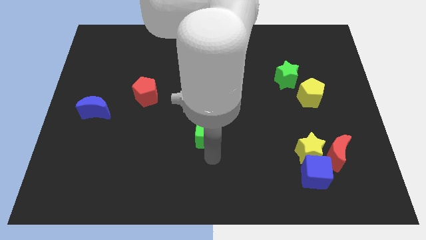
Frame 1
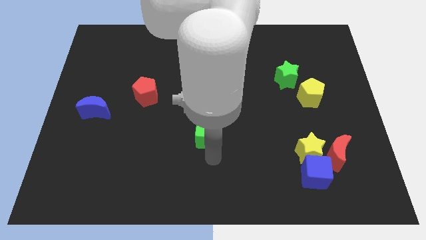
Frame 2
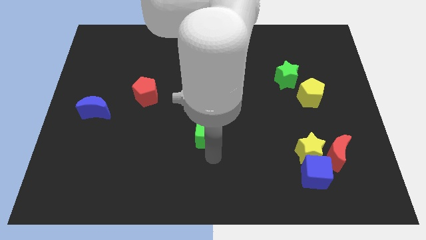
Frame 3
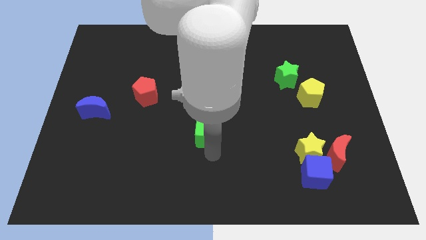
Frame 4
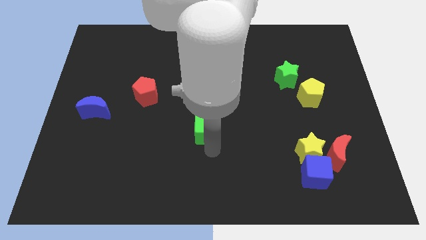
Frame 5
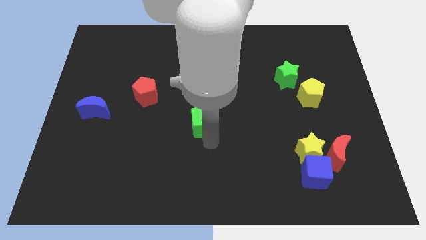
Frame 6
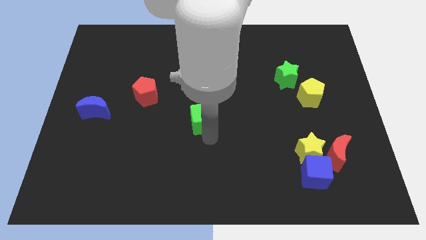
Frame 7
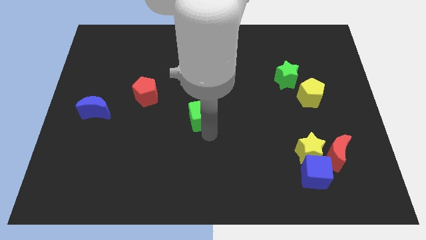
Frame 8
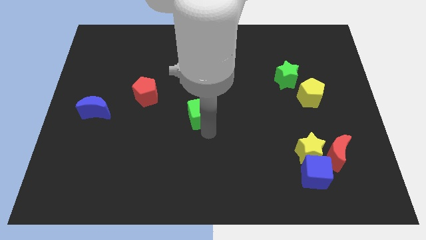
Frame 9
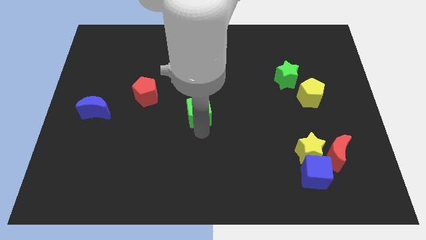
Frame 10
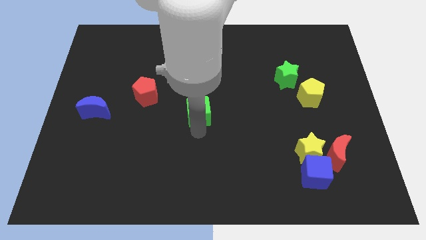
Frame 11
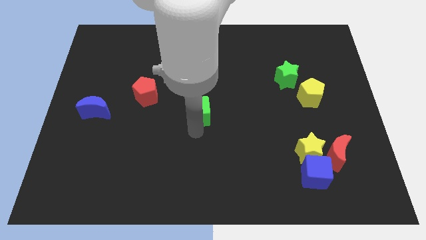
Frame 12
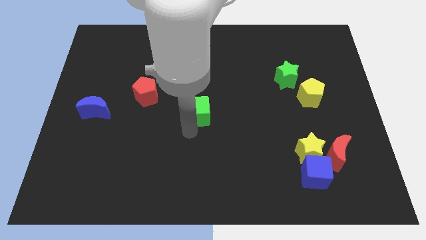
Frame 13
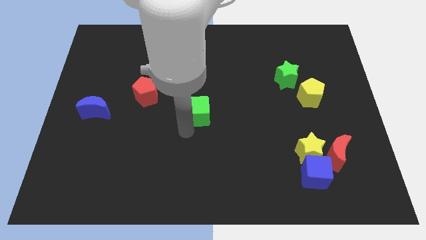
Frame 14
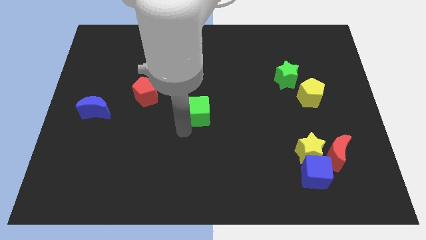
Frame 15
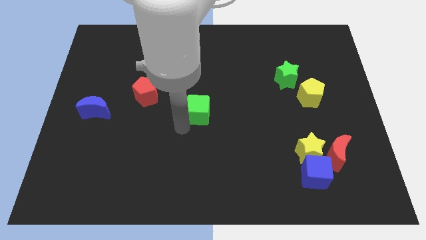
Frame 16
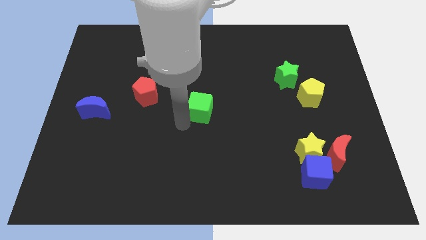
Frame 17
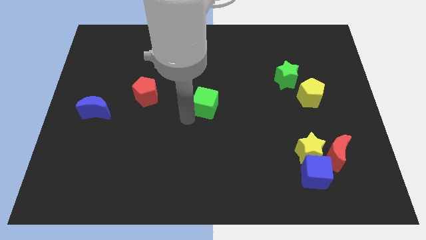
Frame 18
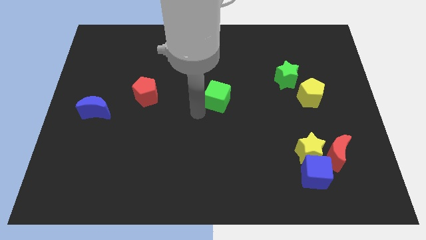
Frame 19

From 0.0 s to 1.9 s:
move the green star to the center of the board

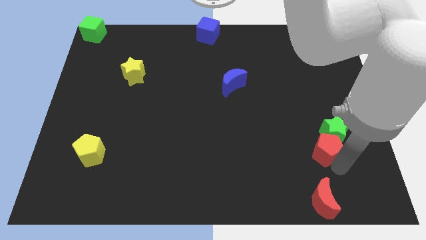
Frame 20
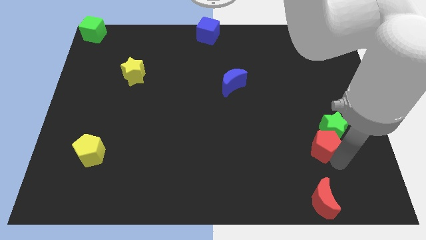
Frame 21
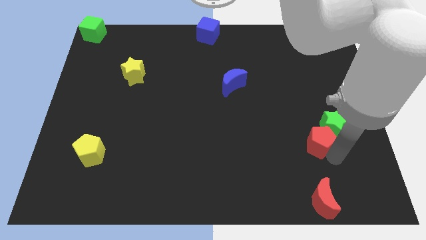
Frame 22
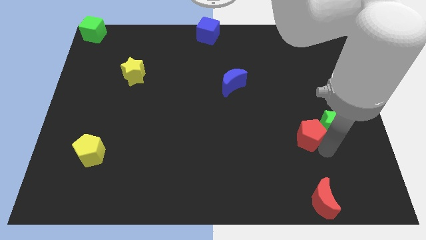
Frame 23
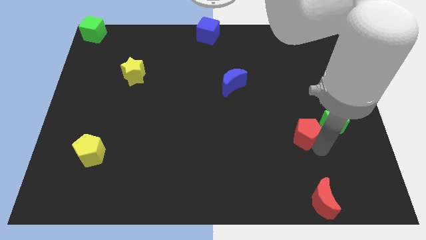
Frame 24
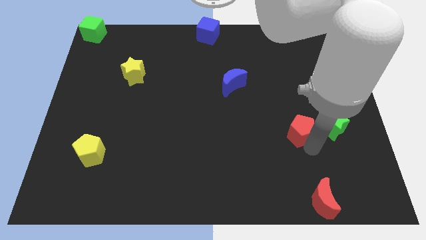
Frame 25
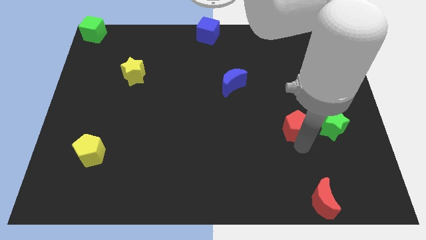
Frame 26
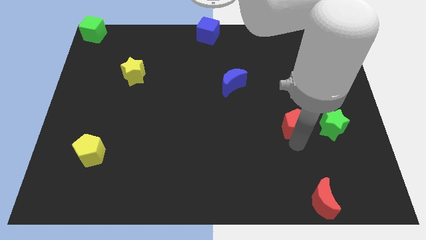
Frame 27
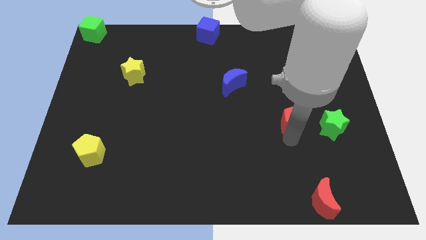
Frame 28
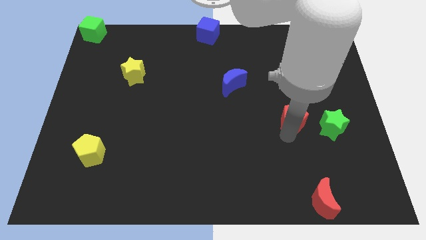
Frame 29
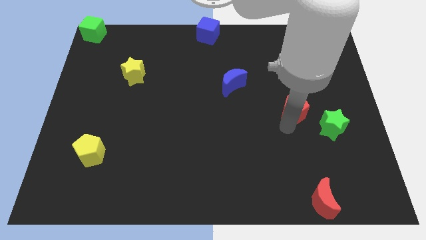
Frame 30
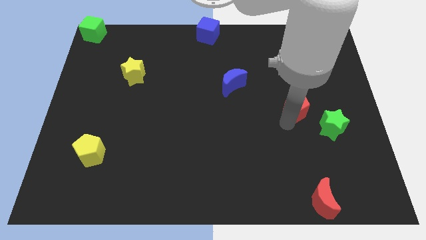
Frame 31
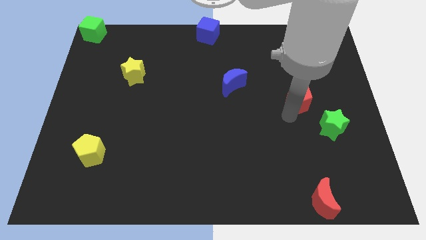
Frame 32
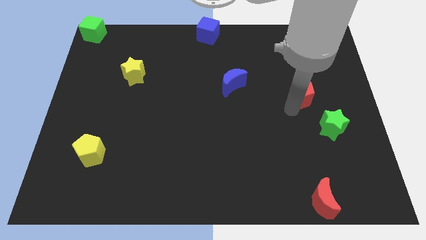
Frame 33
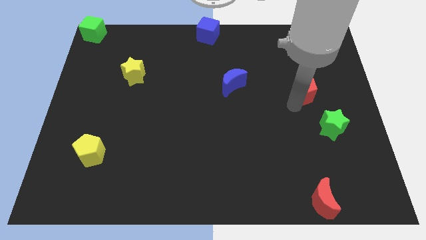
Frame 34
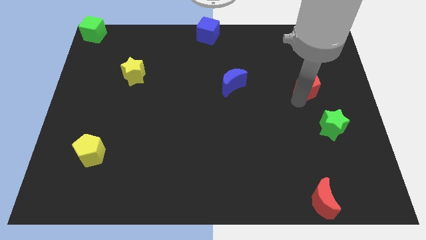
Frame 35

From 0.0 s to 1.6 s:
separate the red pentagon from the green star

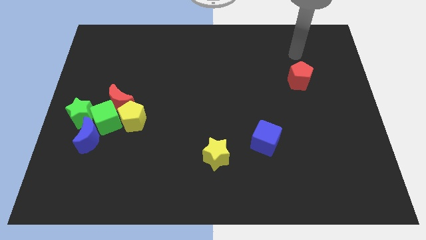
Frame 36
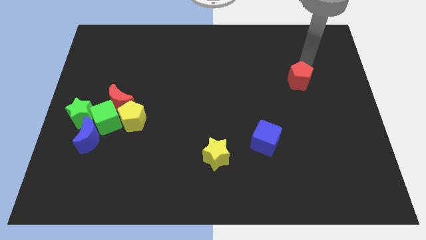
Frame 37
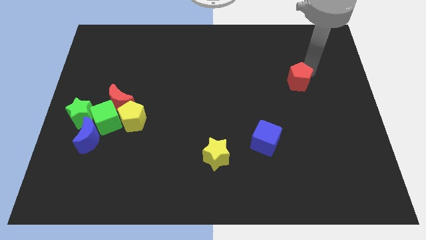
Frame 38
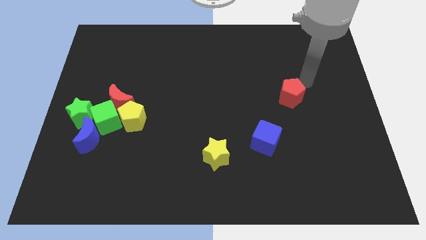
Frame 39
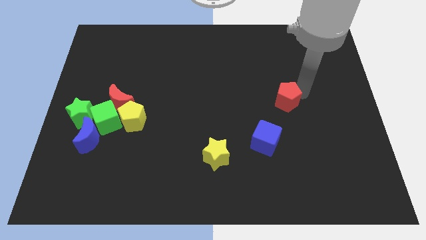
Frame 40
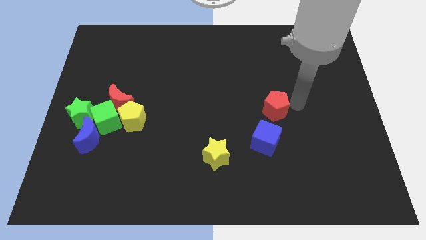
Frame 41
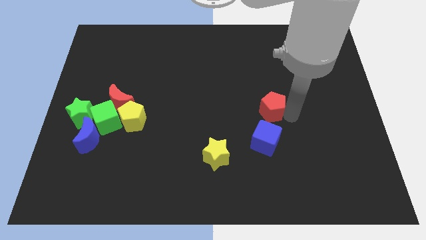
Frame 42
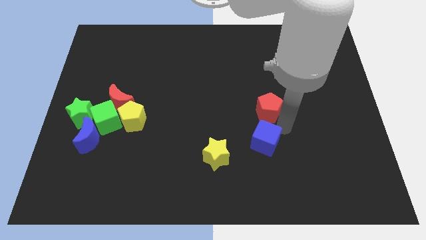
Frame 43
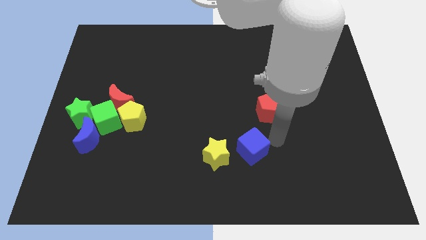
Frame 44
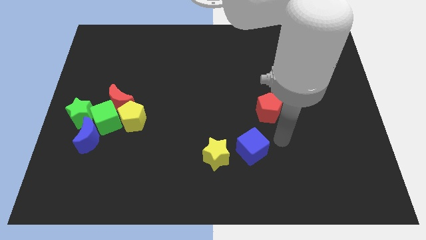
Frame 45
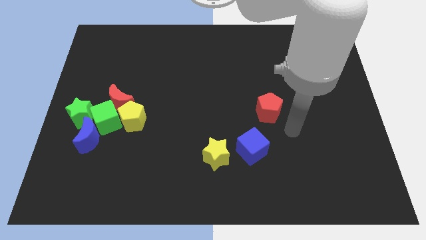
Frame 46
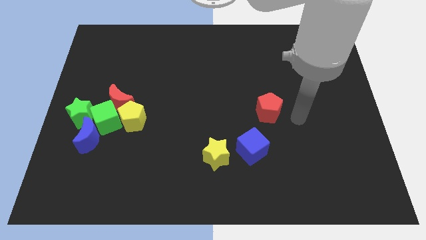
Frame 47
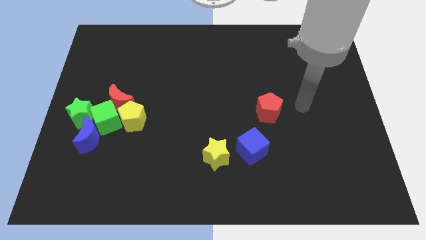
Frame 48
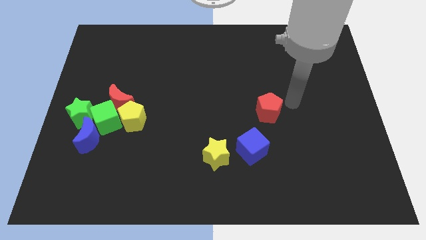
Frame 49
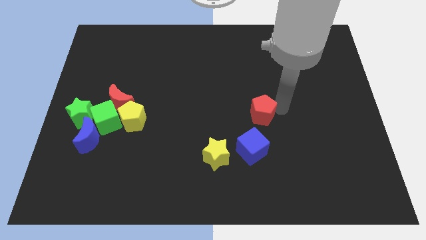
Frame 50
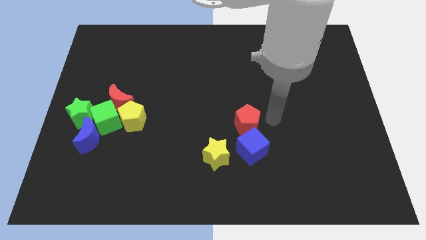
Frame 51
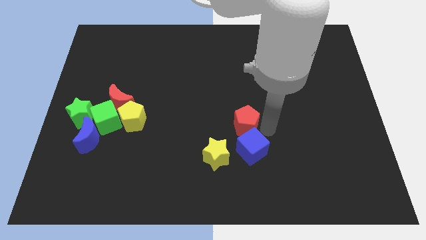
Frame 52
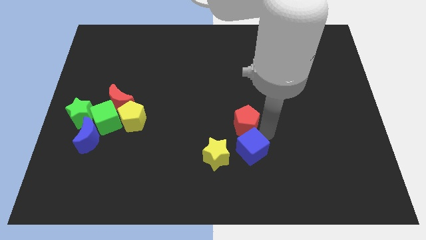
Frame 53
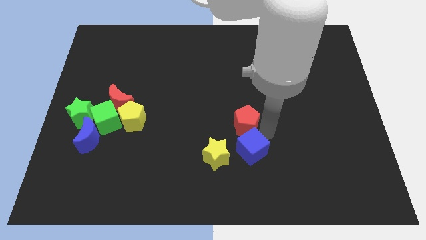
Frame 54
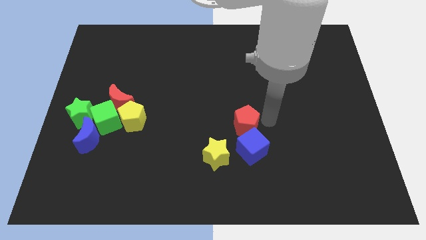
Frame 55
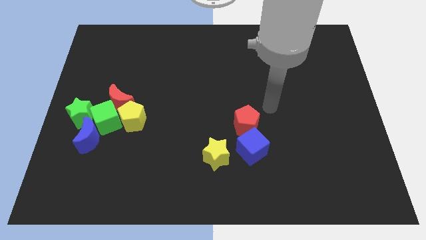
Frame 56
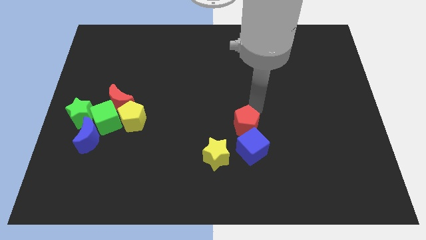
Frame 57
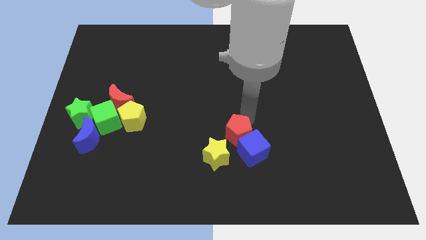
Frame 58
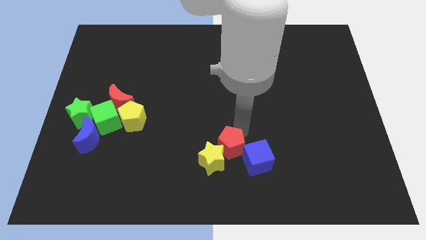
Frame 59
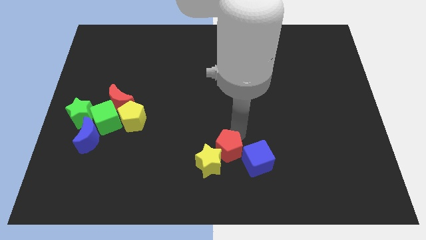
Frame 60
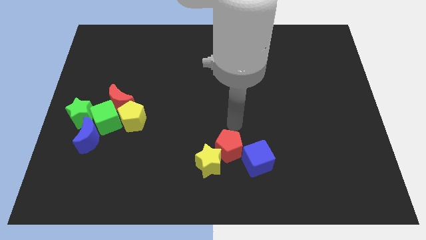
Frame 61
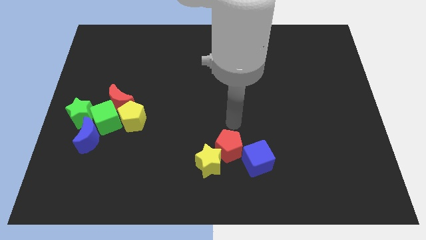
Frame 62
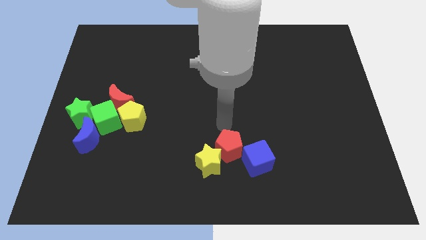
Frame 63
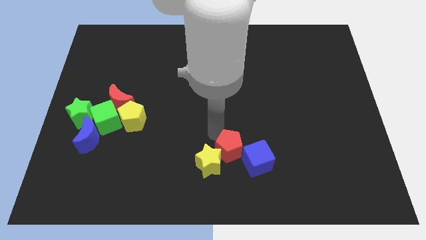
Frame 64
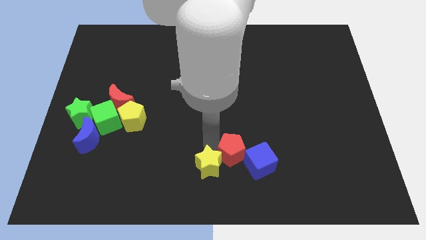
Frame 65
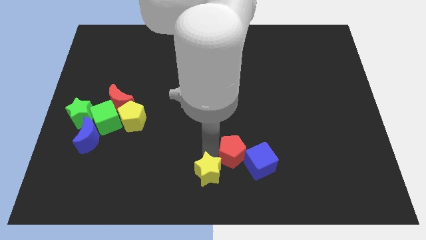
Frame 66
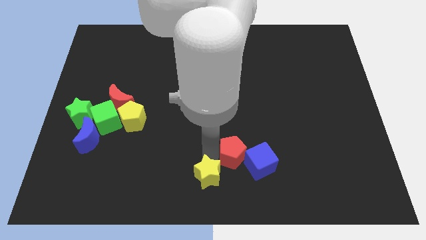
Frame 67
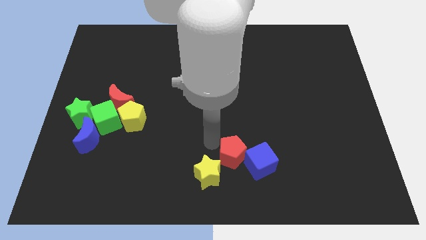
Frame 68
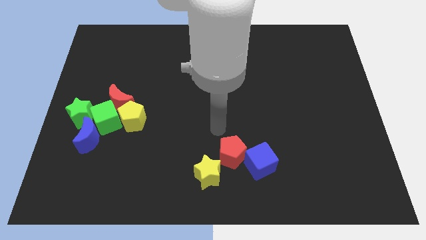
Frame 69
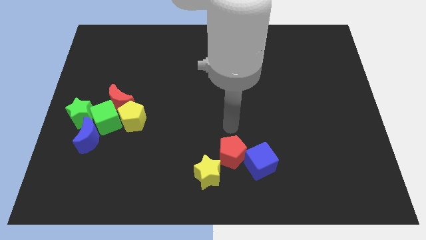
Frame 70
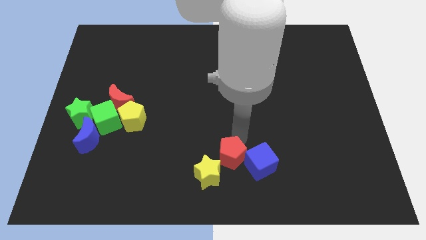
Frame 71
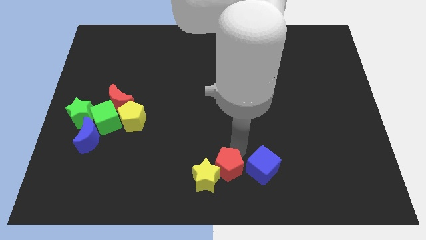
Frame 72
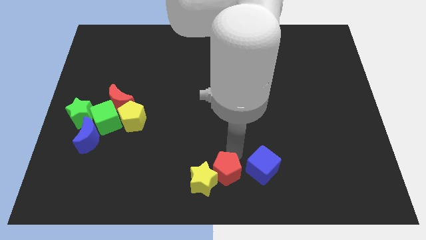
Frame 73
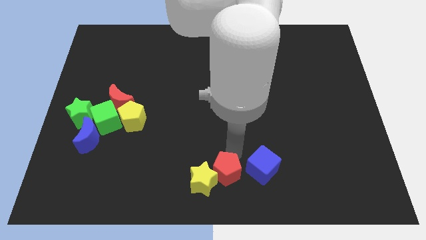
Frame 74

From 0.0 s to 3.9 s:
slide the red pentagon towards the bottom center

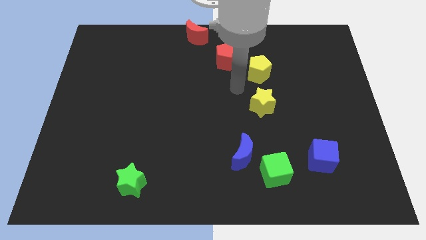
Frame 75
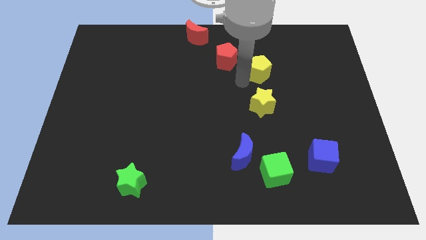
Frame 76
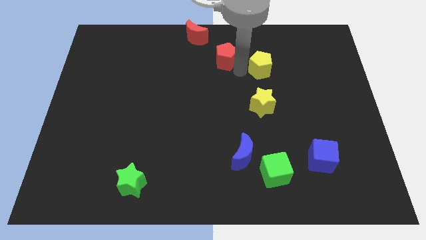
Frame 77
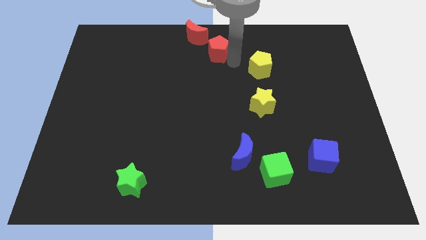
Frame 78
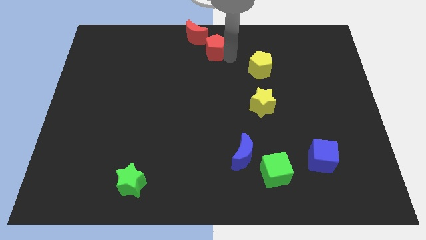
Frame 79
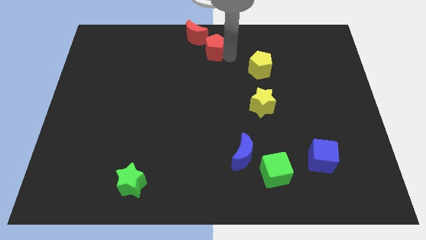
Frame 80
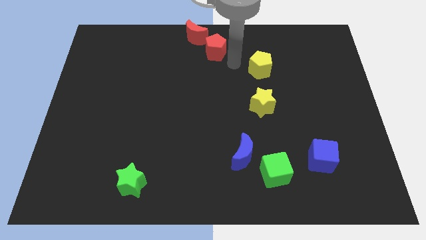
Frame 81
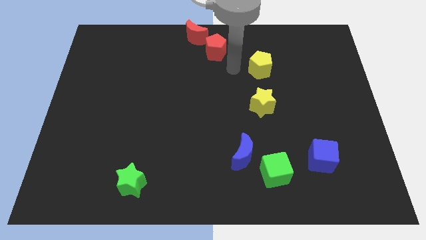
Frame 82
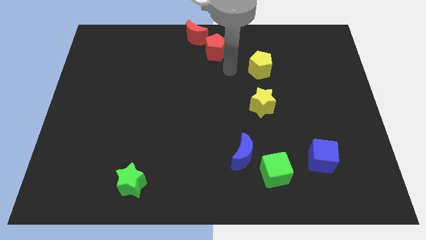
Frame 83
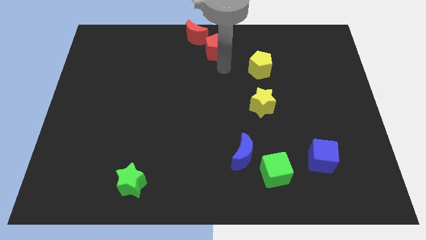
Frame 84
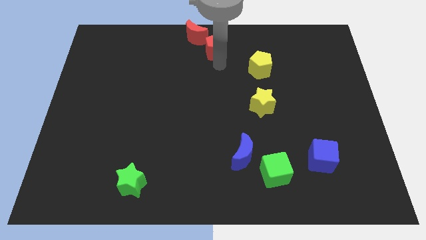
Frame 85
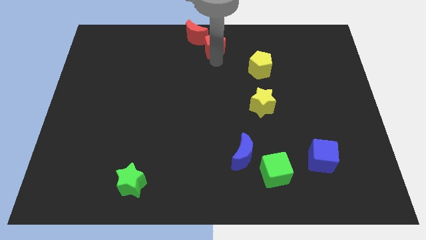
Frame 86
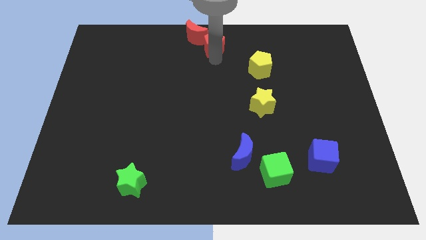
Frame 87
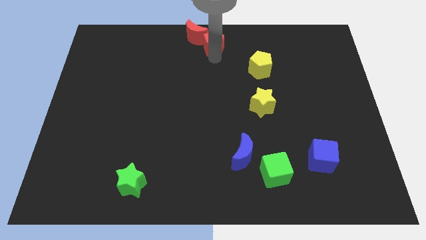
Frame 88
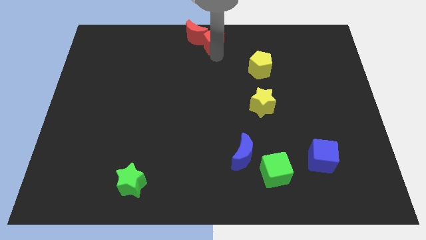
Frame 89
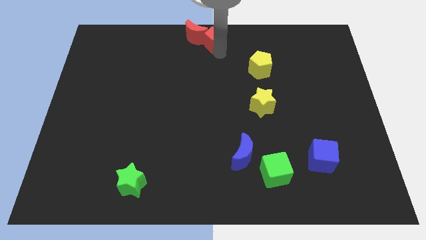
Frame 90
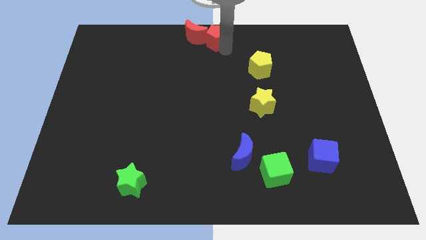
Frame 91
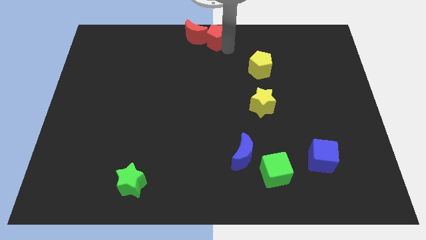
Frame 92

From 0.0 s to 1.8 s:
move the red pentagon into the red crescent
